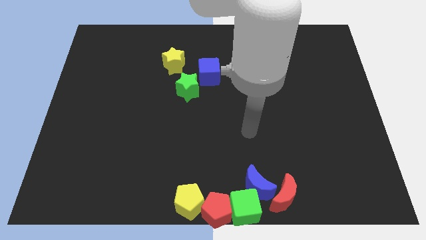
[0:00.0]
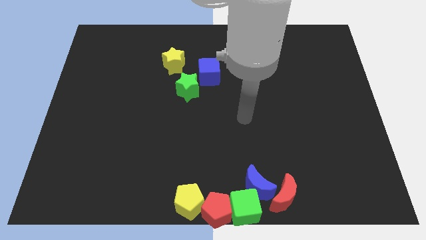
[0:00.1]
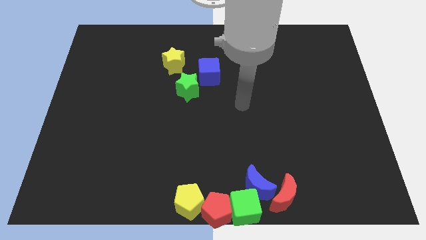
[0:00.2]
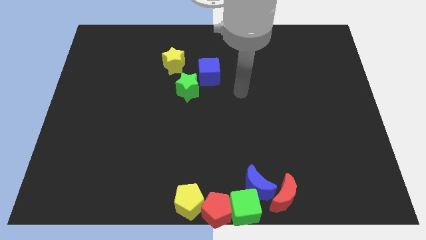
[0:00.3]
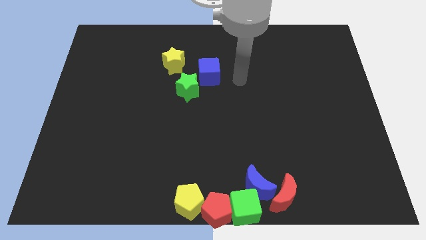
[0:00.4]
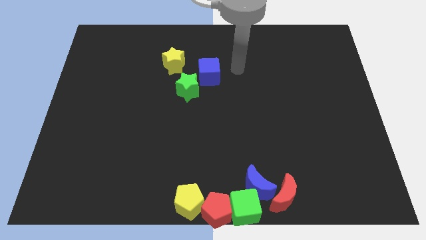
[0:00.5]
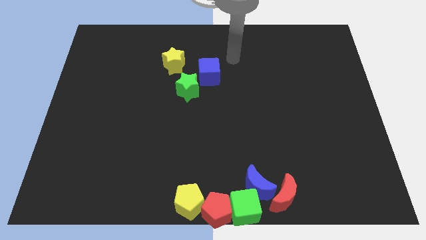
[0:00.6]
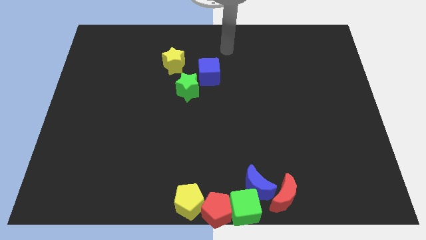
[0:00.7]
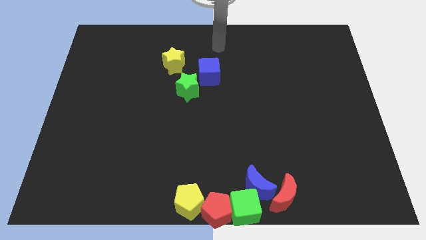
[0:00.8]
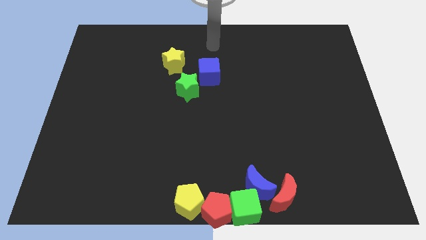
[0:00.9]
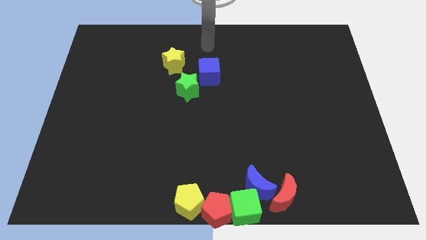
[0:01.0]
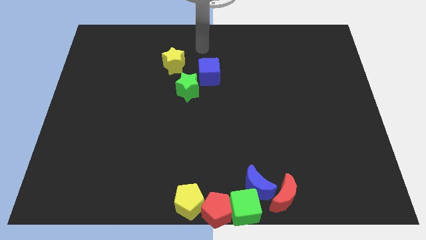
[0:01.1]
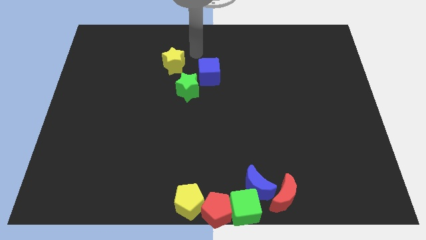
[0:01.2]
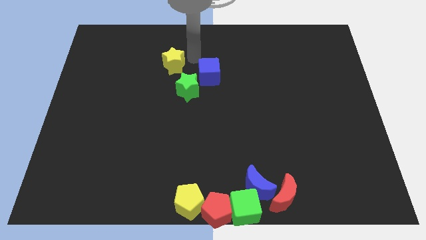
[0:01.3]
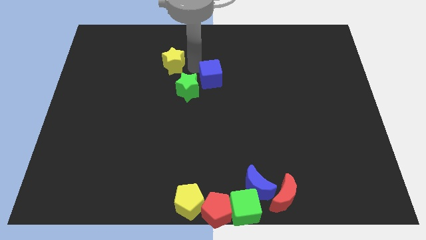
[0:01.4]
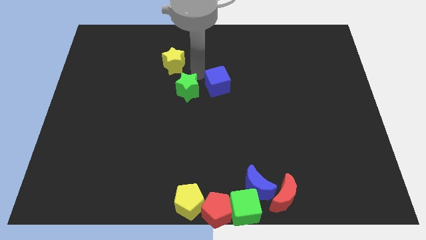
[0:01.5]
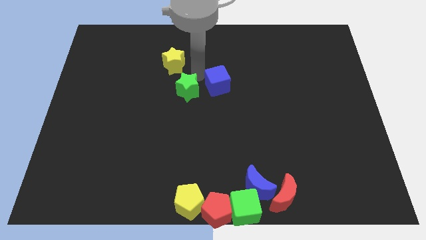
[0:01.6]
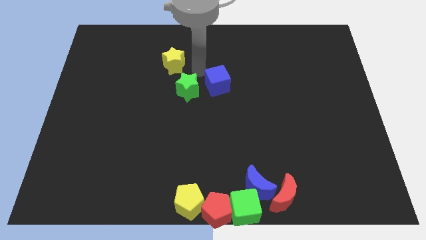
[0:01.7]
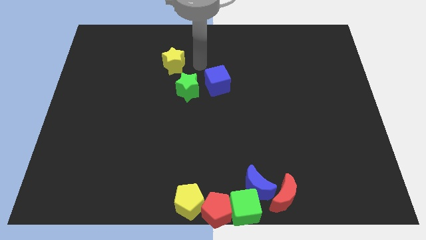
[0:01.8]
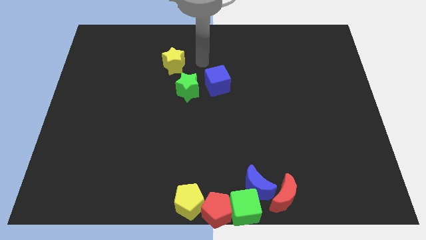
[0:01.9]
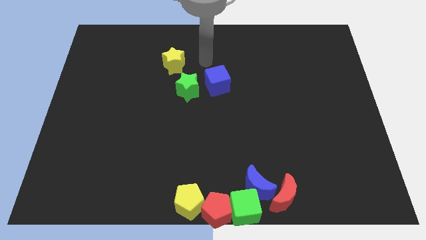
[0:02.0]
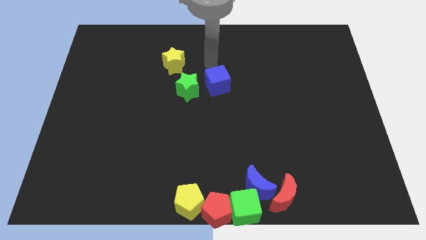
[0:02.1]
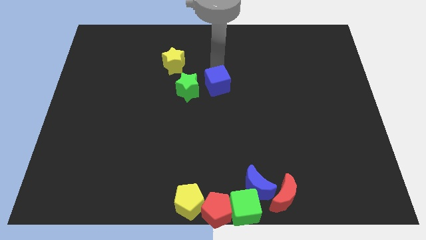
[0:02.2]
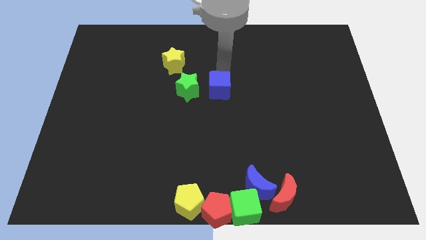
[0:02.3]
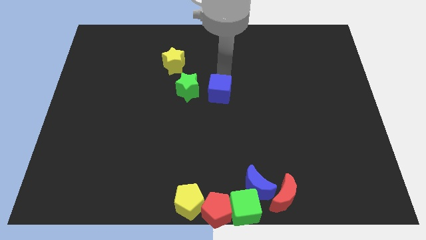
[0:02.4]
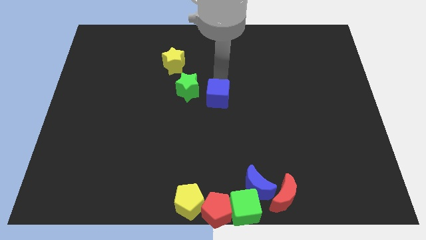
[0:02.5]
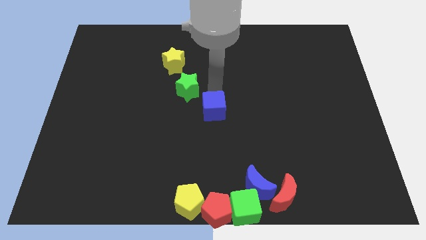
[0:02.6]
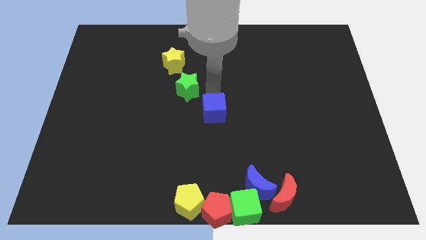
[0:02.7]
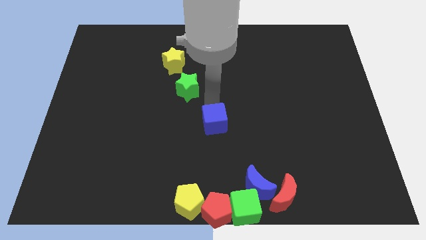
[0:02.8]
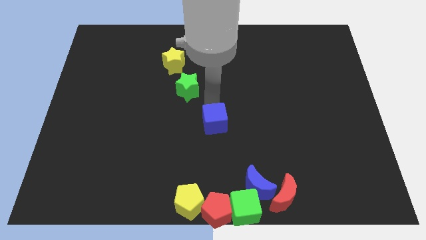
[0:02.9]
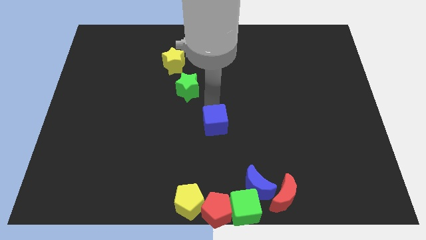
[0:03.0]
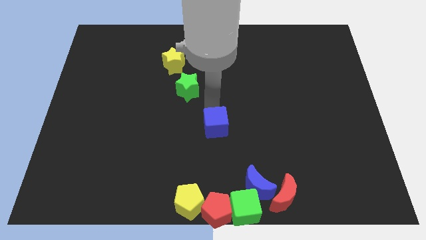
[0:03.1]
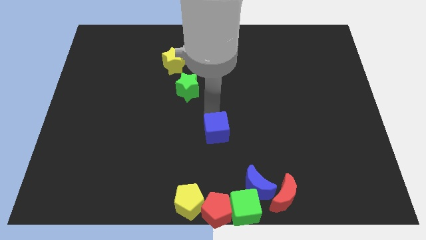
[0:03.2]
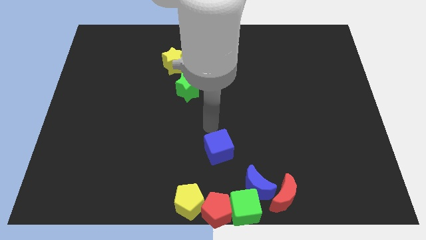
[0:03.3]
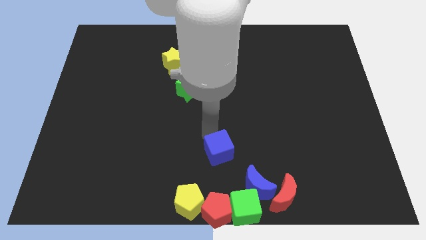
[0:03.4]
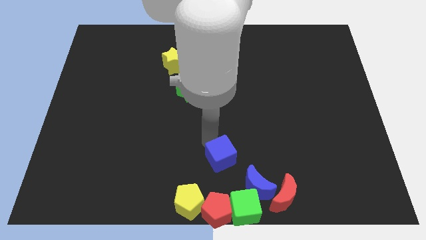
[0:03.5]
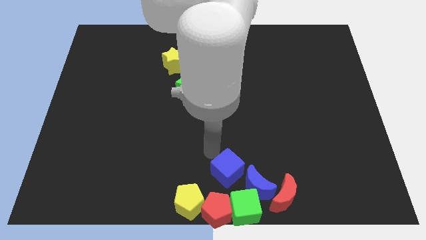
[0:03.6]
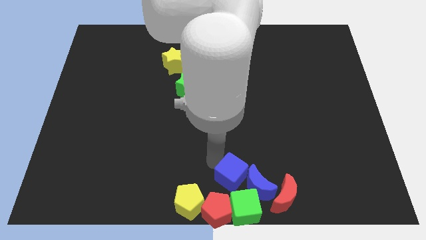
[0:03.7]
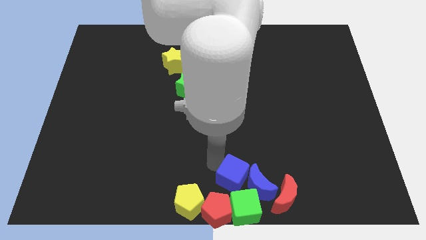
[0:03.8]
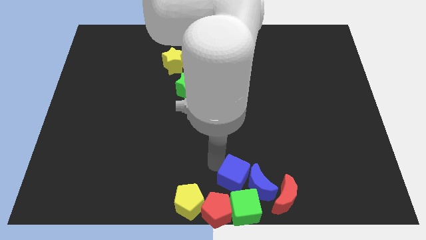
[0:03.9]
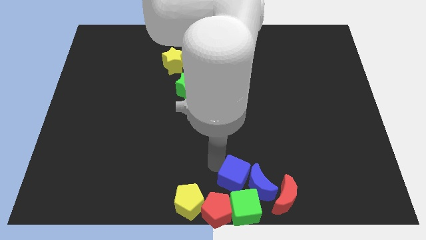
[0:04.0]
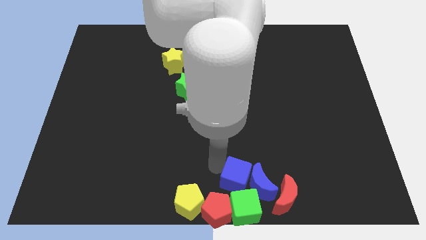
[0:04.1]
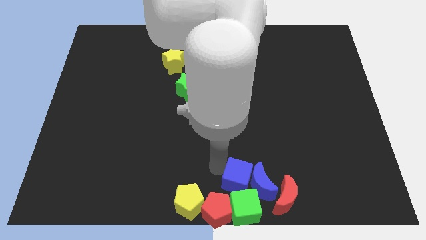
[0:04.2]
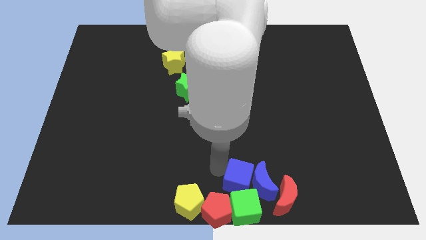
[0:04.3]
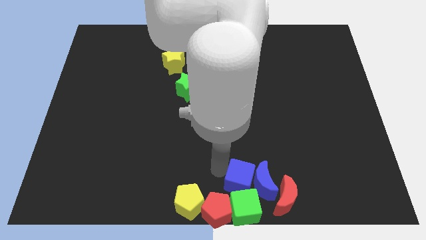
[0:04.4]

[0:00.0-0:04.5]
push the blue cube into the blue crescent

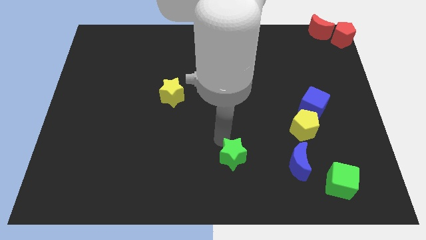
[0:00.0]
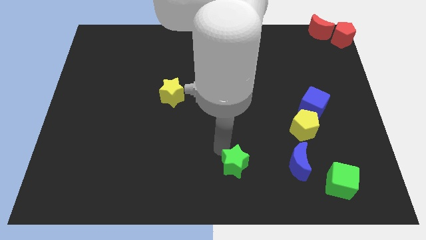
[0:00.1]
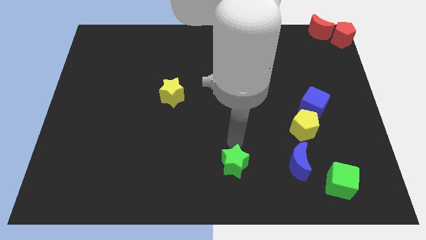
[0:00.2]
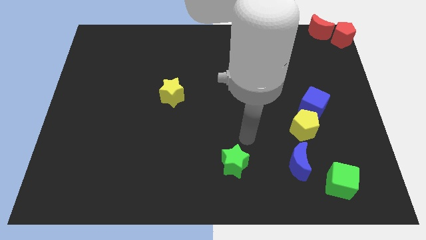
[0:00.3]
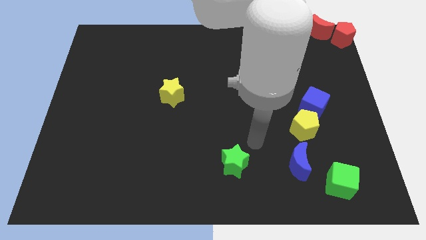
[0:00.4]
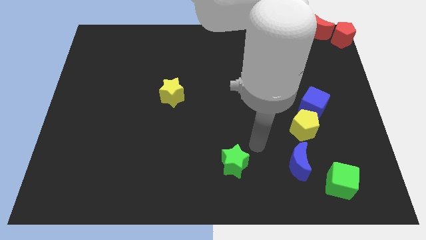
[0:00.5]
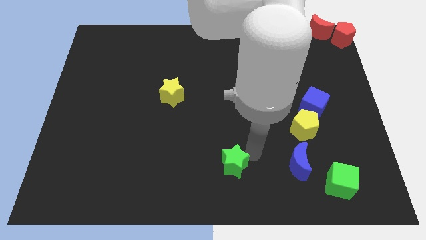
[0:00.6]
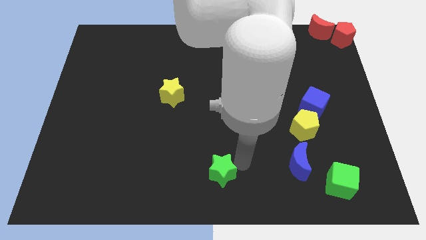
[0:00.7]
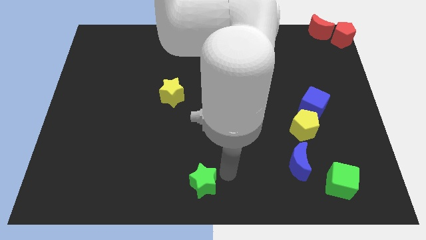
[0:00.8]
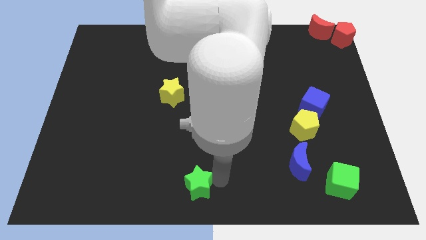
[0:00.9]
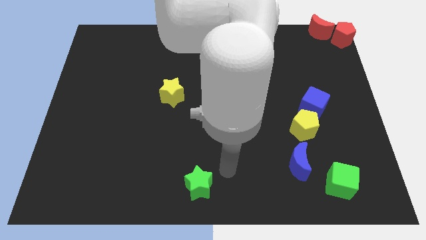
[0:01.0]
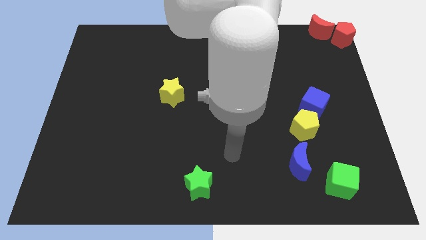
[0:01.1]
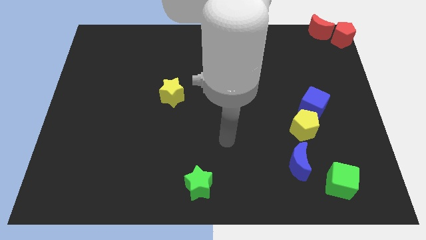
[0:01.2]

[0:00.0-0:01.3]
move the green star towards the bottom center of the board

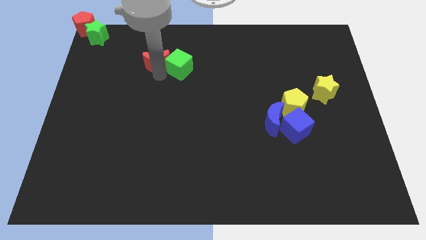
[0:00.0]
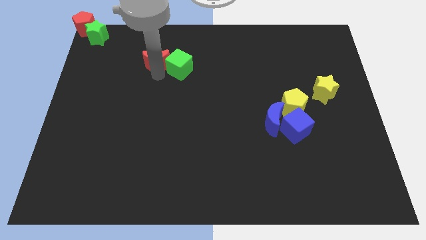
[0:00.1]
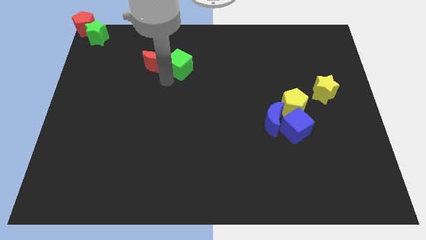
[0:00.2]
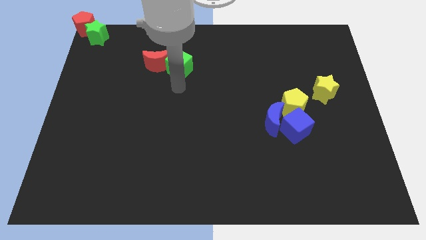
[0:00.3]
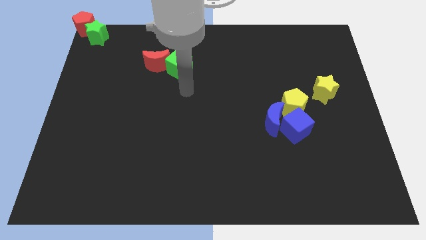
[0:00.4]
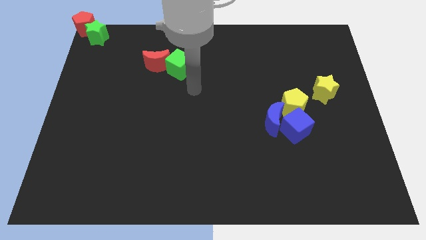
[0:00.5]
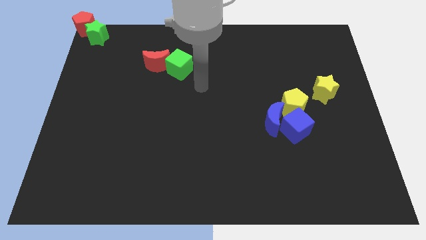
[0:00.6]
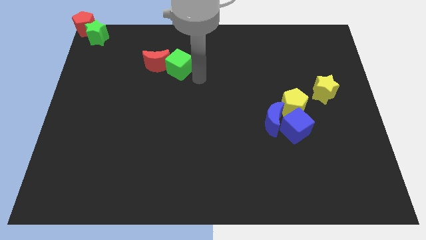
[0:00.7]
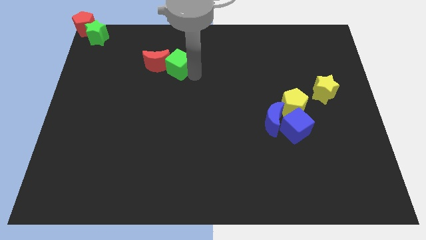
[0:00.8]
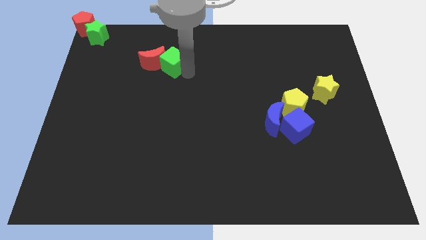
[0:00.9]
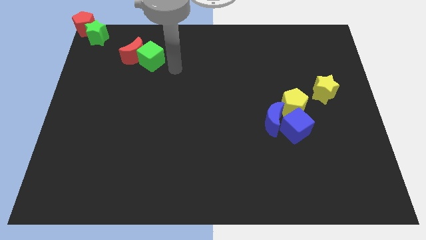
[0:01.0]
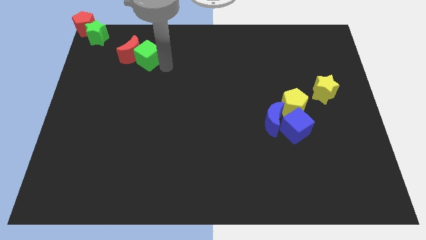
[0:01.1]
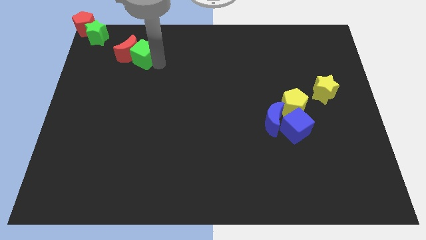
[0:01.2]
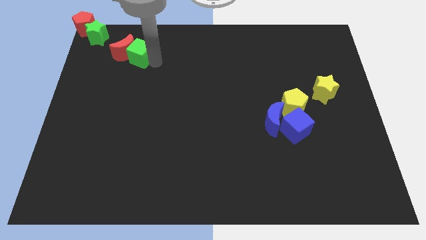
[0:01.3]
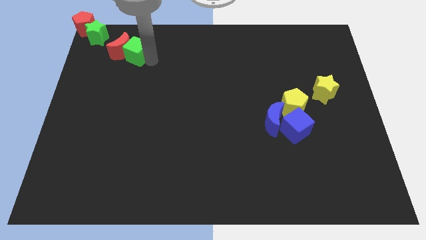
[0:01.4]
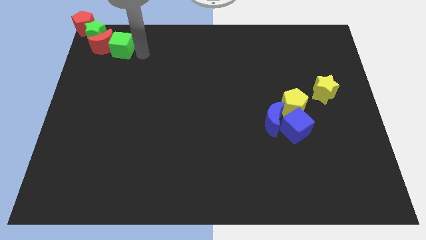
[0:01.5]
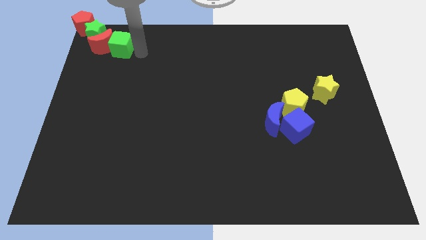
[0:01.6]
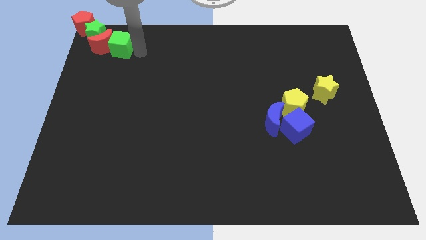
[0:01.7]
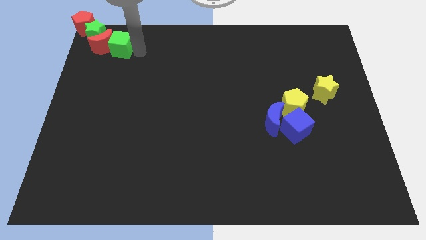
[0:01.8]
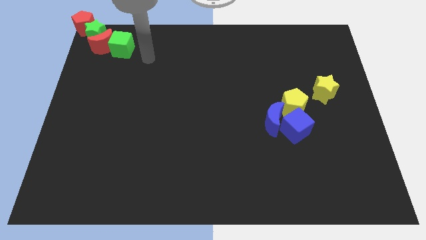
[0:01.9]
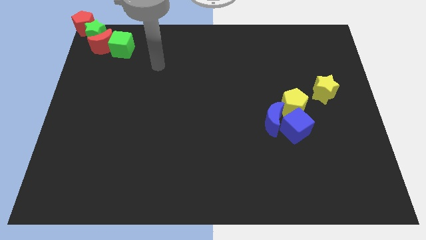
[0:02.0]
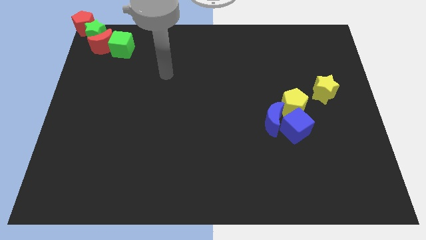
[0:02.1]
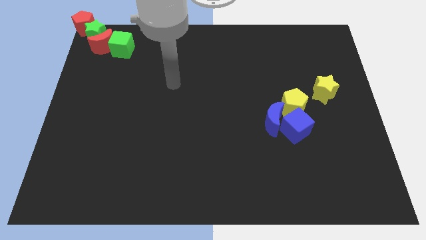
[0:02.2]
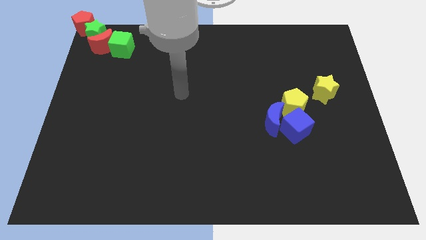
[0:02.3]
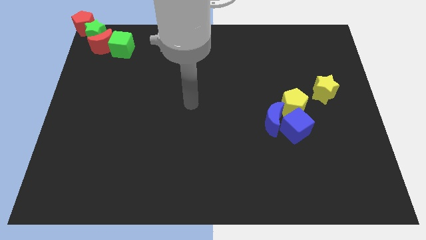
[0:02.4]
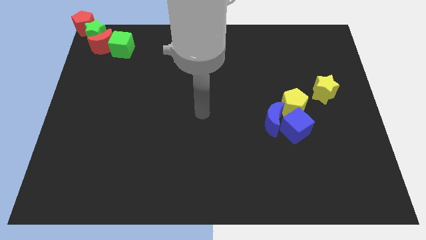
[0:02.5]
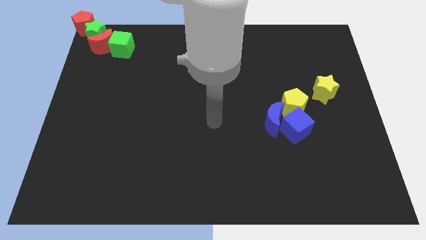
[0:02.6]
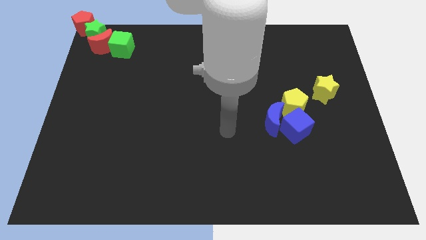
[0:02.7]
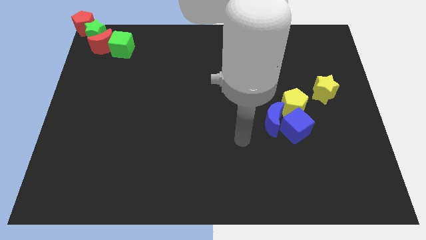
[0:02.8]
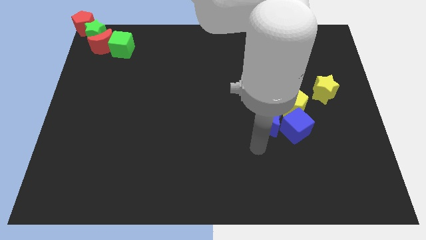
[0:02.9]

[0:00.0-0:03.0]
push red moon and green cube in to green star
